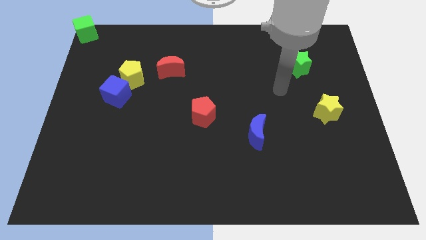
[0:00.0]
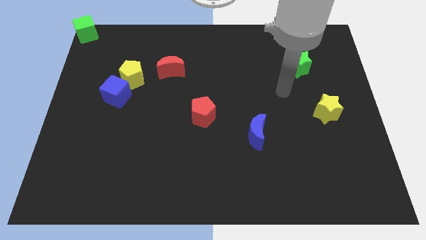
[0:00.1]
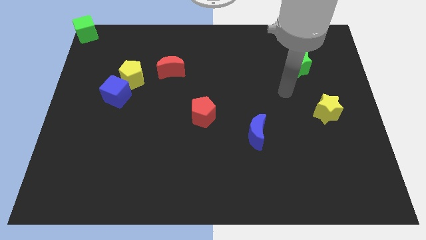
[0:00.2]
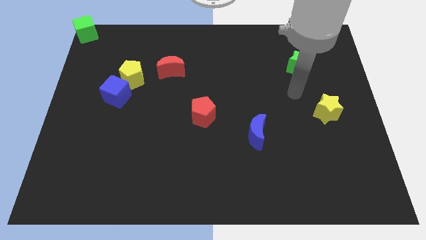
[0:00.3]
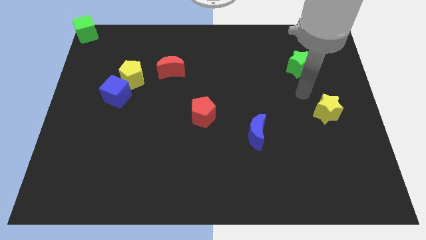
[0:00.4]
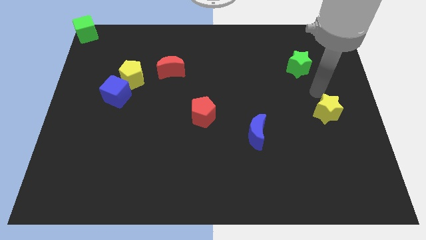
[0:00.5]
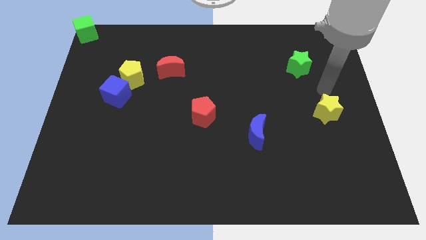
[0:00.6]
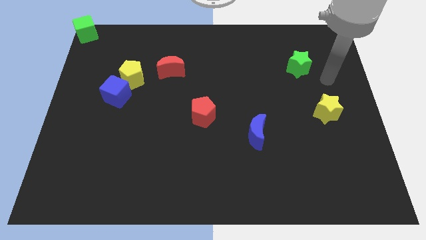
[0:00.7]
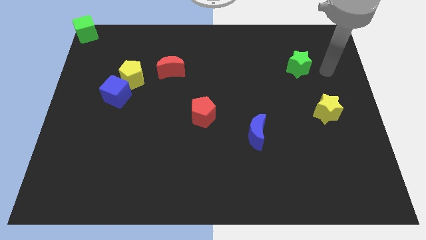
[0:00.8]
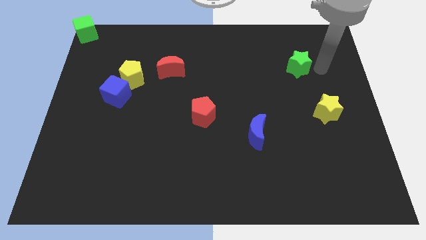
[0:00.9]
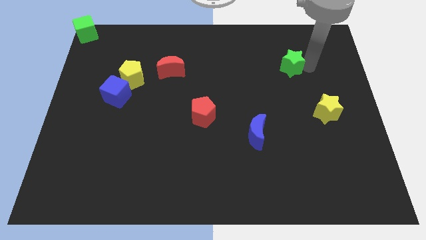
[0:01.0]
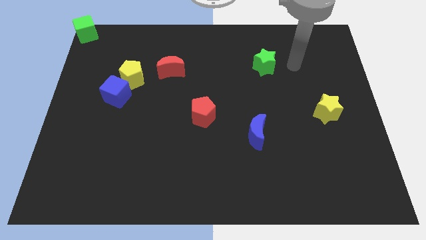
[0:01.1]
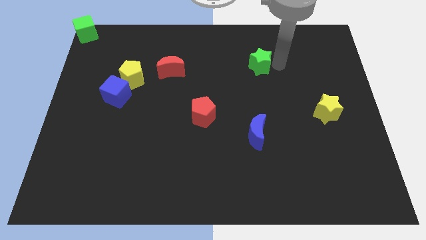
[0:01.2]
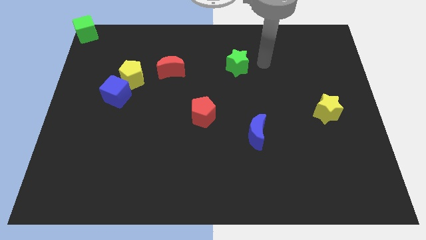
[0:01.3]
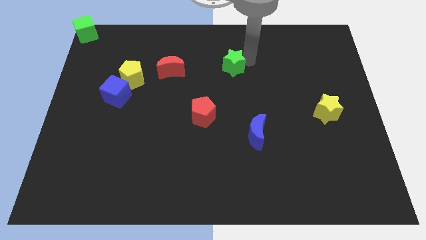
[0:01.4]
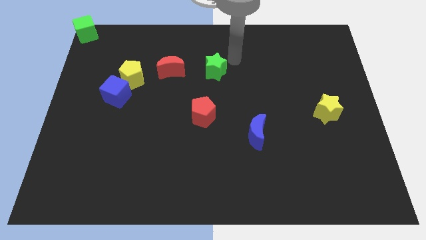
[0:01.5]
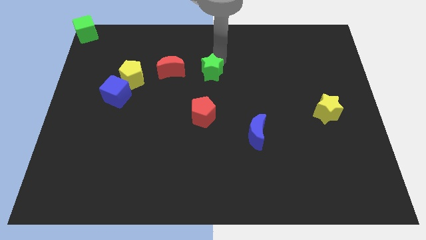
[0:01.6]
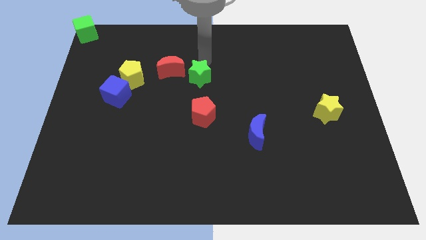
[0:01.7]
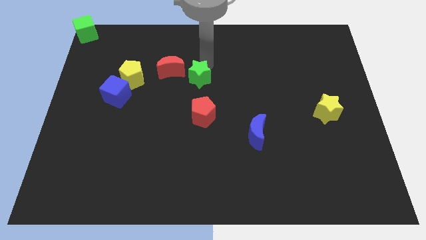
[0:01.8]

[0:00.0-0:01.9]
place the green star to right of the red moon

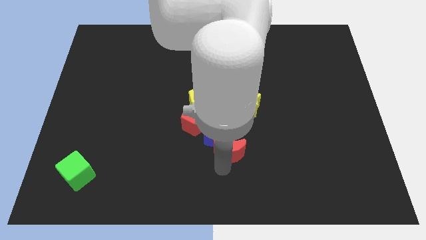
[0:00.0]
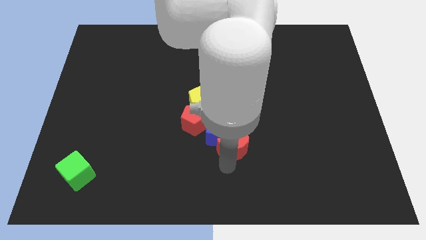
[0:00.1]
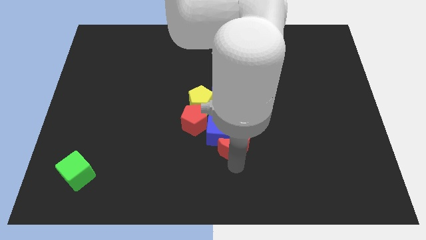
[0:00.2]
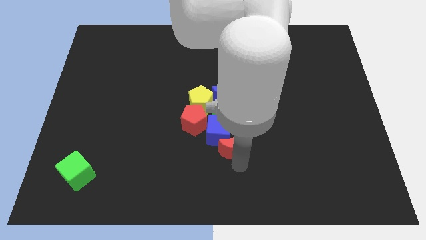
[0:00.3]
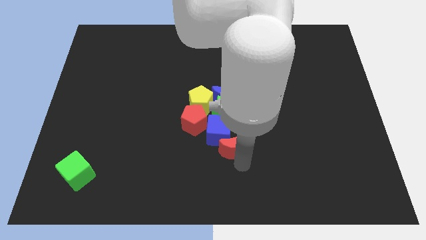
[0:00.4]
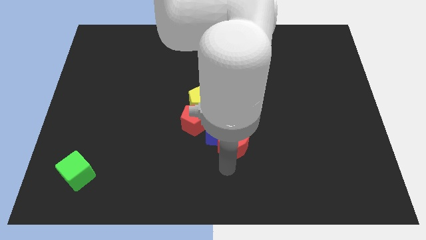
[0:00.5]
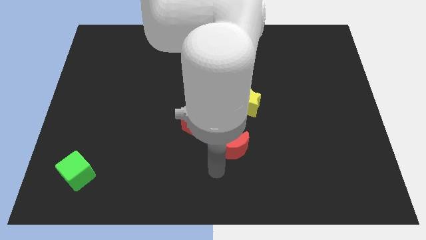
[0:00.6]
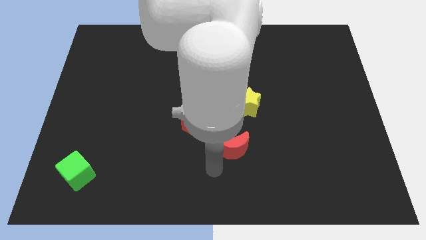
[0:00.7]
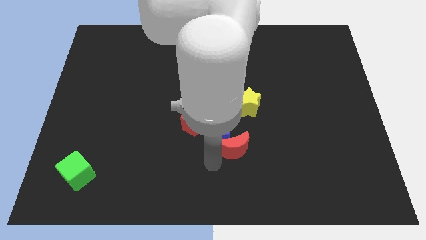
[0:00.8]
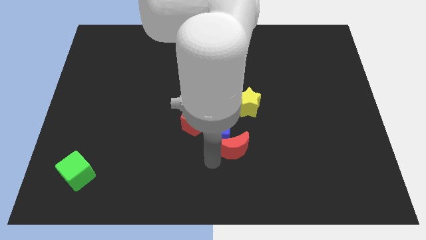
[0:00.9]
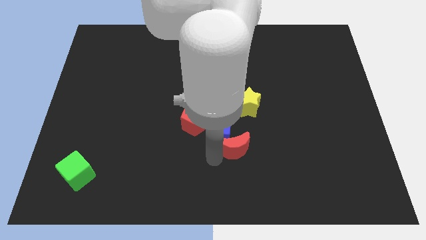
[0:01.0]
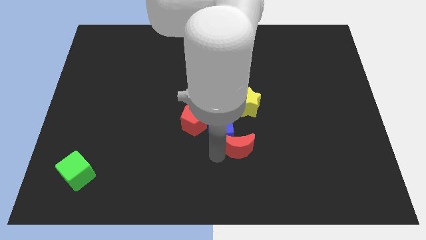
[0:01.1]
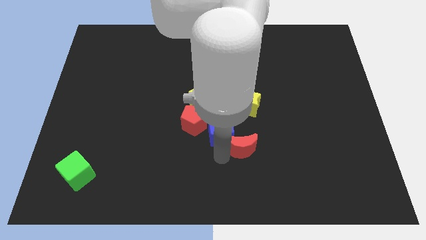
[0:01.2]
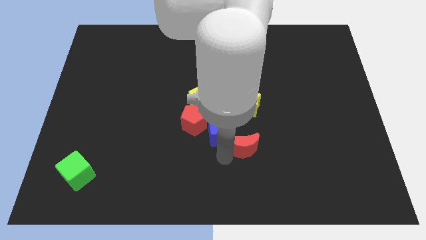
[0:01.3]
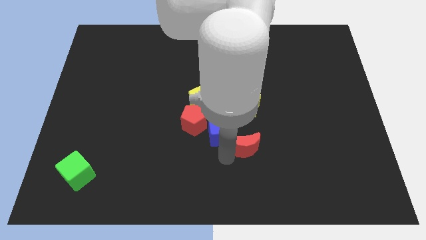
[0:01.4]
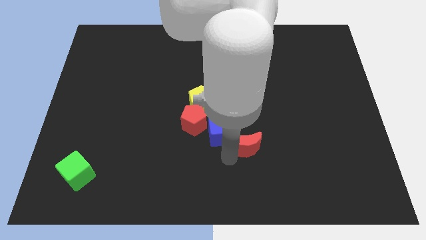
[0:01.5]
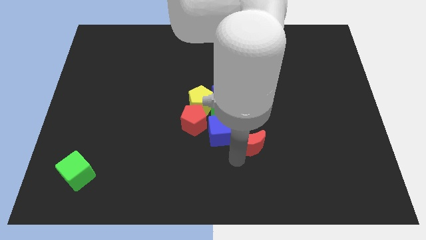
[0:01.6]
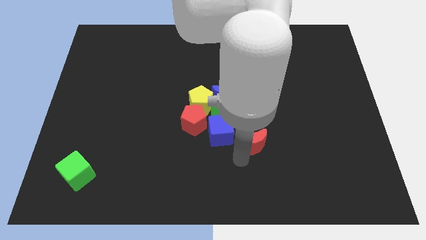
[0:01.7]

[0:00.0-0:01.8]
place the red crescent vertically below the yellow star

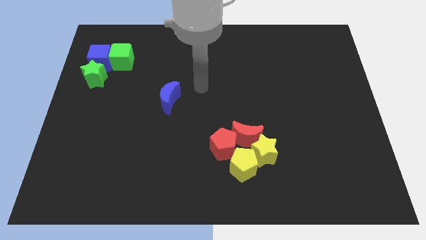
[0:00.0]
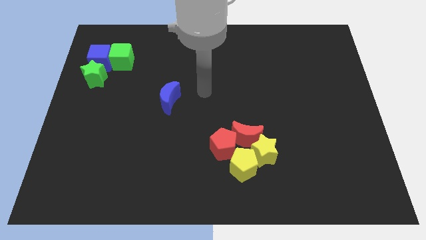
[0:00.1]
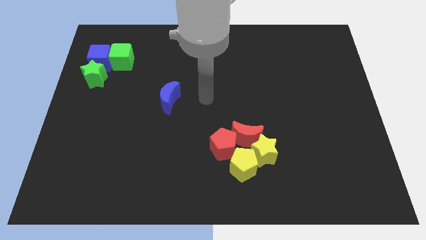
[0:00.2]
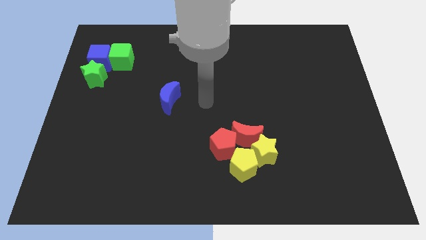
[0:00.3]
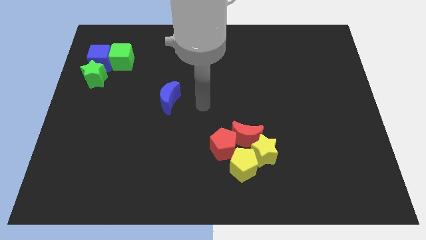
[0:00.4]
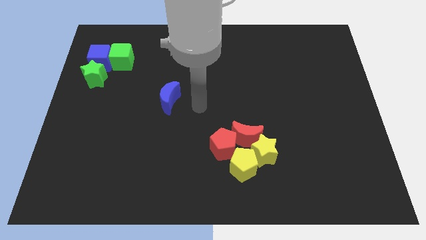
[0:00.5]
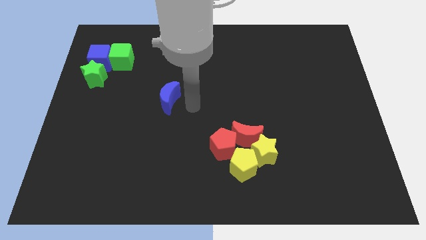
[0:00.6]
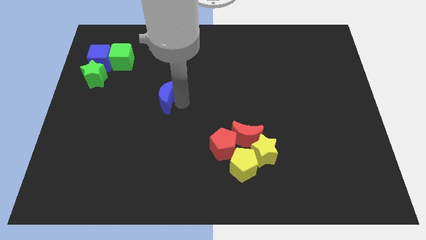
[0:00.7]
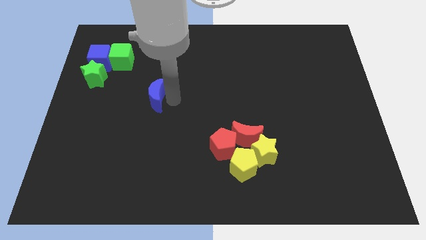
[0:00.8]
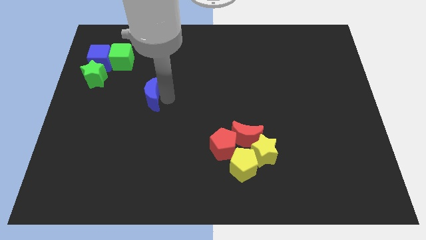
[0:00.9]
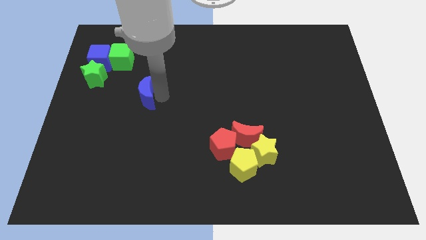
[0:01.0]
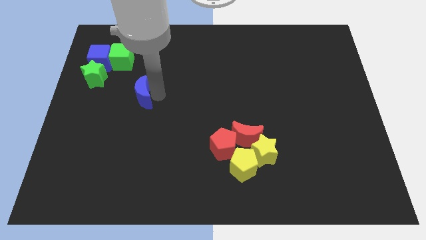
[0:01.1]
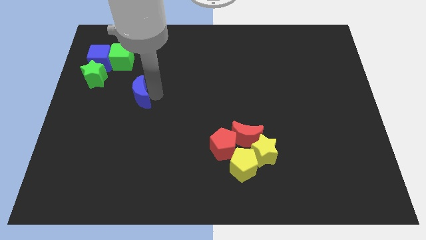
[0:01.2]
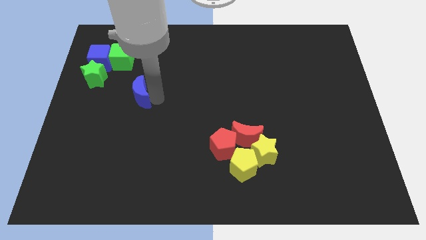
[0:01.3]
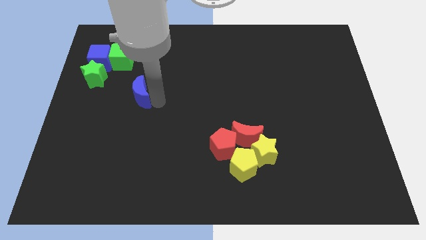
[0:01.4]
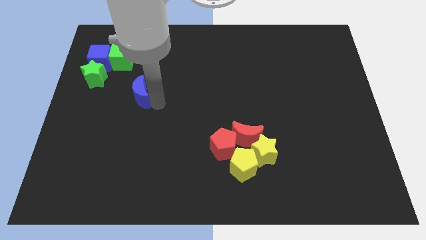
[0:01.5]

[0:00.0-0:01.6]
move the blue moon slightly to the left of the board

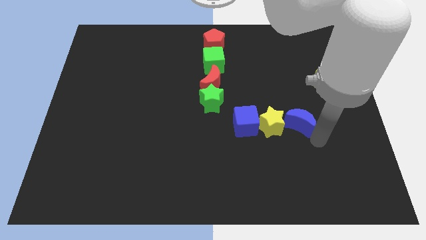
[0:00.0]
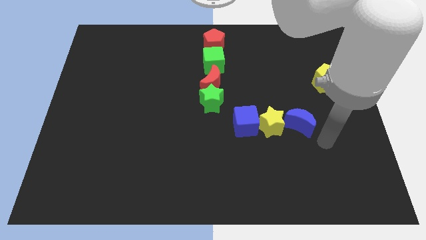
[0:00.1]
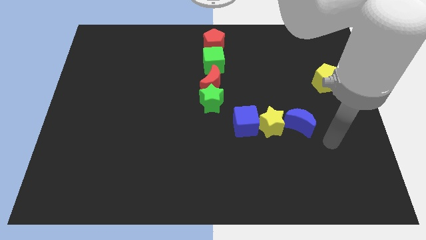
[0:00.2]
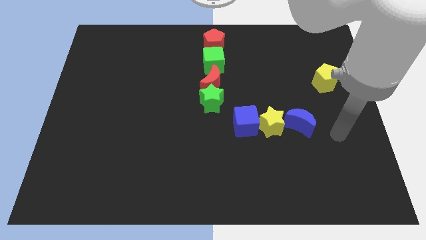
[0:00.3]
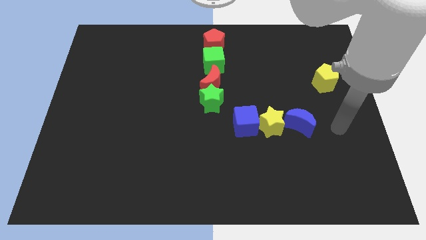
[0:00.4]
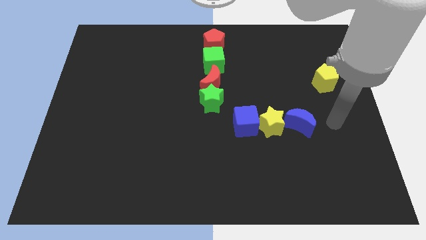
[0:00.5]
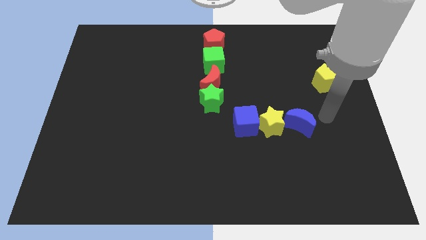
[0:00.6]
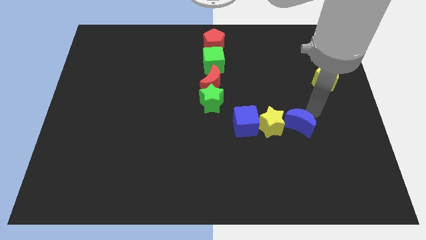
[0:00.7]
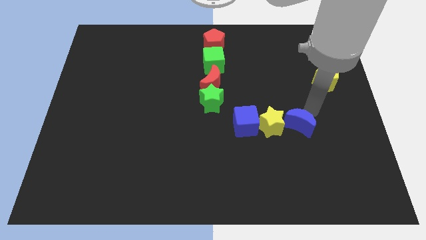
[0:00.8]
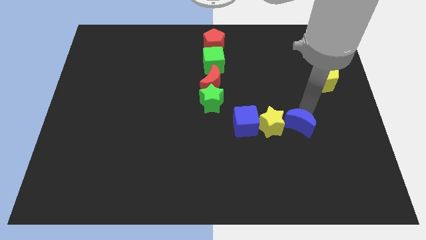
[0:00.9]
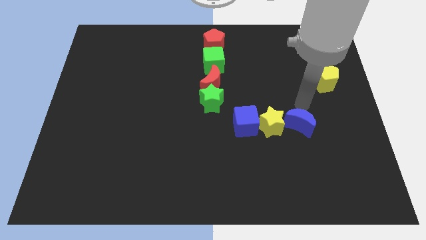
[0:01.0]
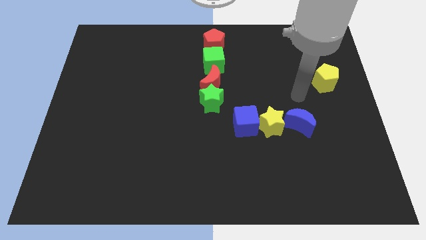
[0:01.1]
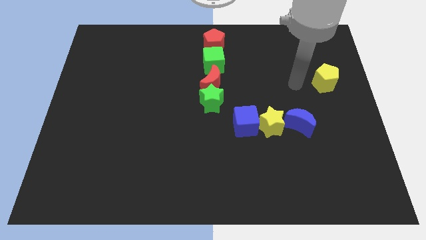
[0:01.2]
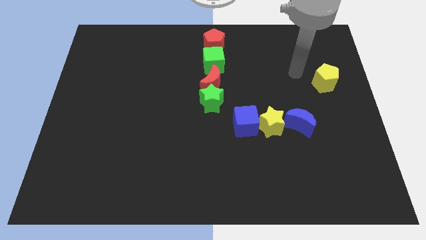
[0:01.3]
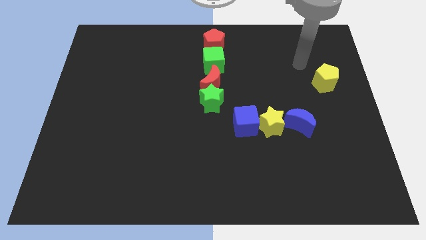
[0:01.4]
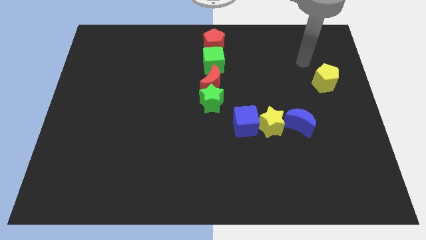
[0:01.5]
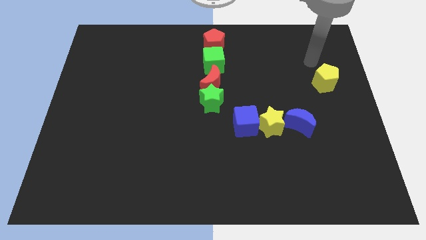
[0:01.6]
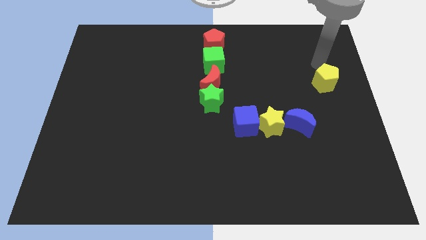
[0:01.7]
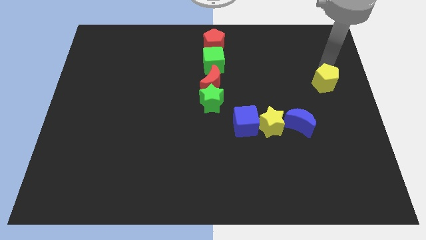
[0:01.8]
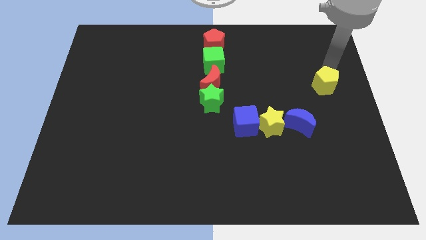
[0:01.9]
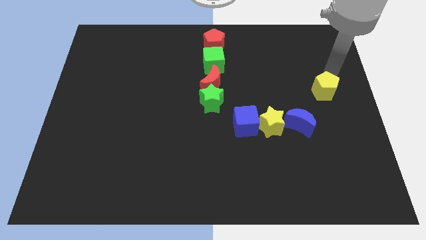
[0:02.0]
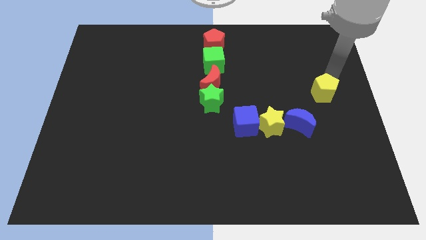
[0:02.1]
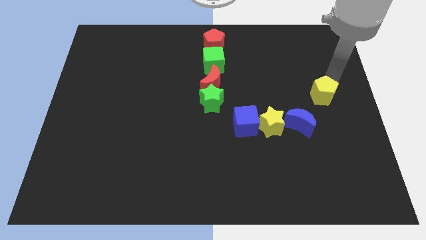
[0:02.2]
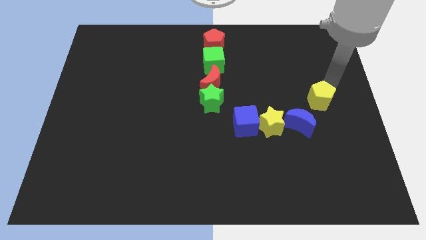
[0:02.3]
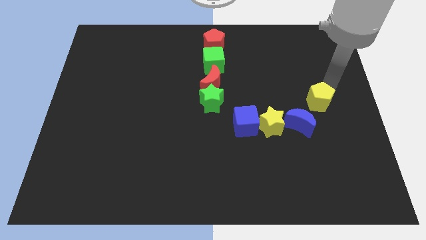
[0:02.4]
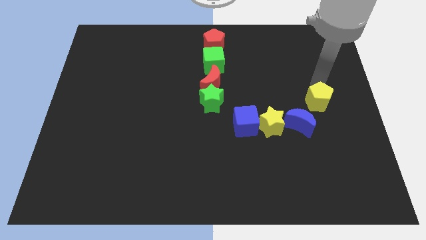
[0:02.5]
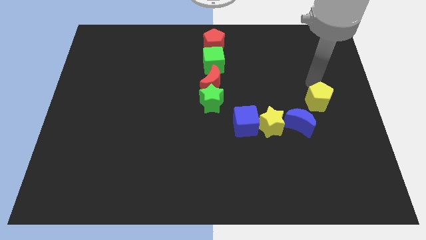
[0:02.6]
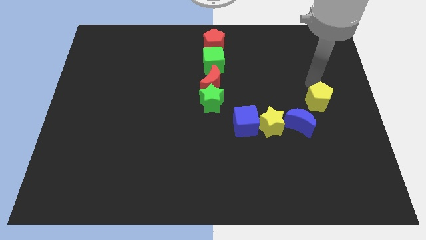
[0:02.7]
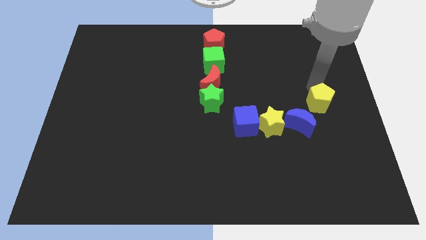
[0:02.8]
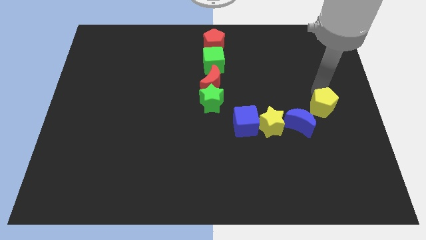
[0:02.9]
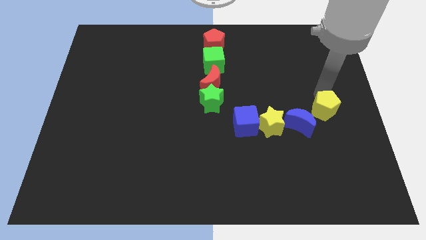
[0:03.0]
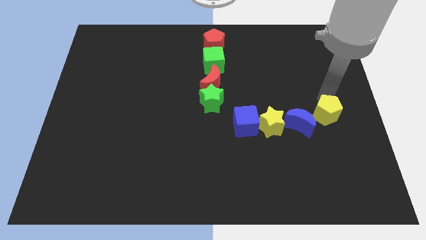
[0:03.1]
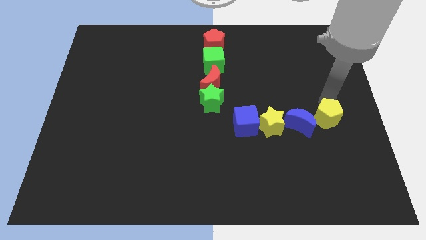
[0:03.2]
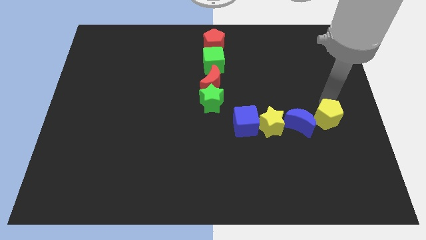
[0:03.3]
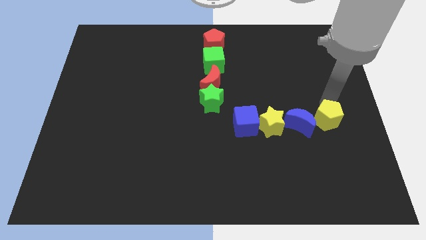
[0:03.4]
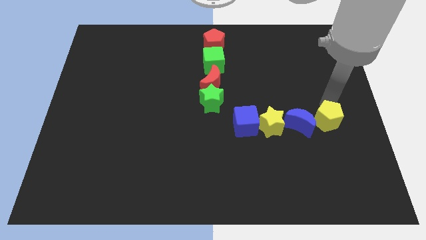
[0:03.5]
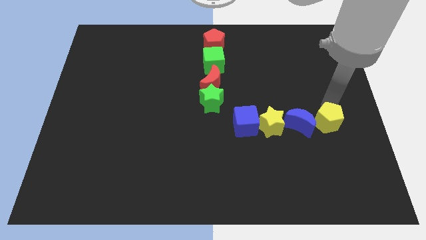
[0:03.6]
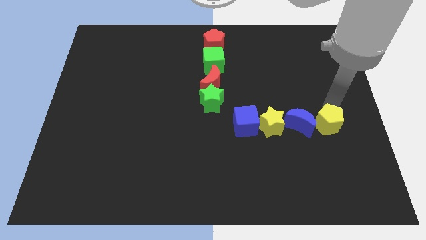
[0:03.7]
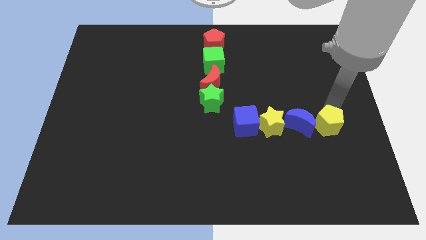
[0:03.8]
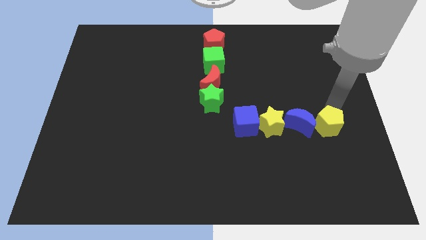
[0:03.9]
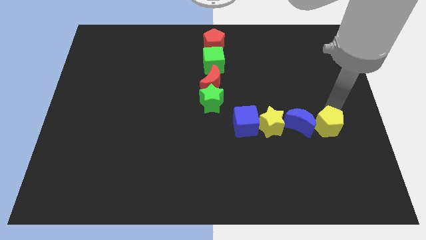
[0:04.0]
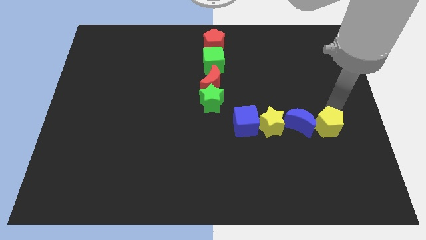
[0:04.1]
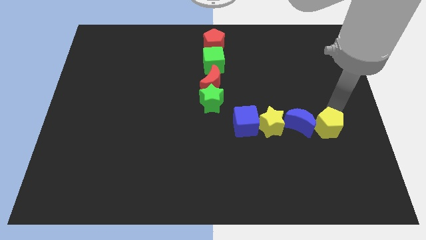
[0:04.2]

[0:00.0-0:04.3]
move the yellow pentagon to the right of the blue crescent
